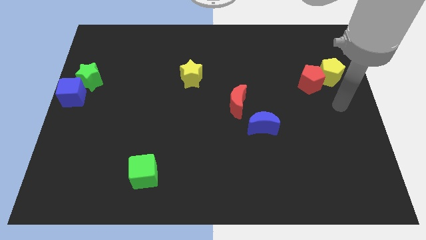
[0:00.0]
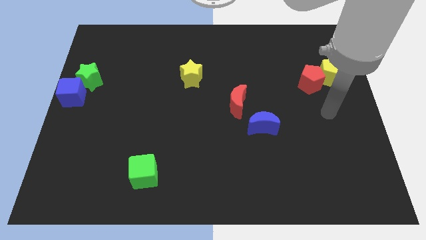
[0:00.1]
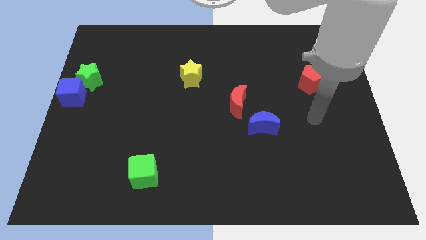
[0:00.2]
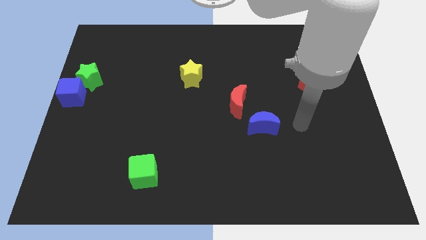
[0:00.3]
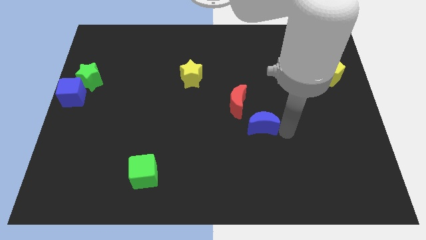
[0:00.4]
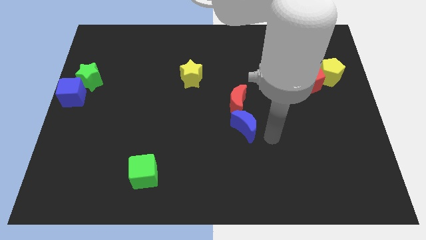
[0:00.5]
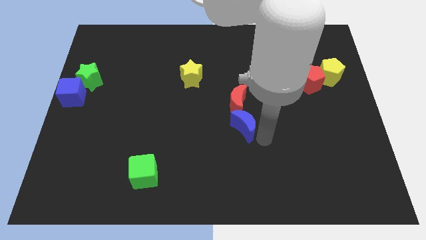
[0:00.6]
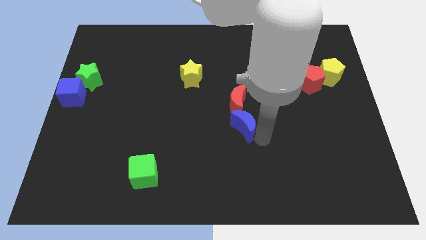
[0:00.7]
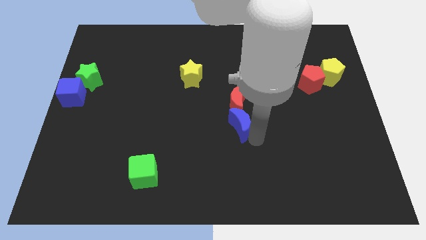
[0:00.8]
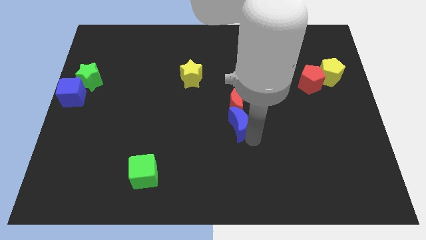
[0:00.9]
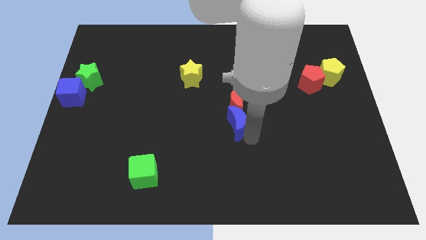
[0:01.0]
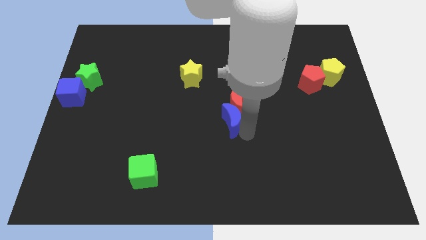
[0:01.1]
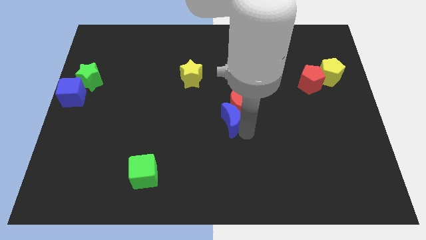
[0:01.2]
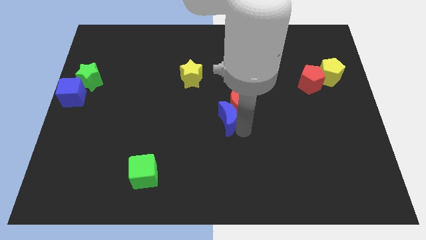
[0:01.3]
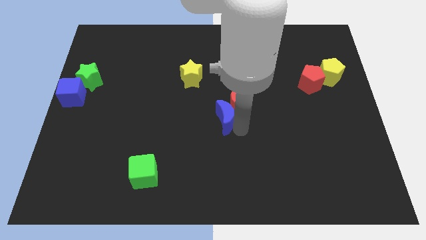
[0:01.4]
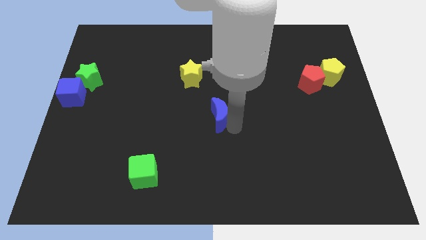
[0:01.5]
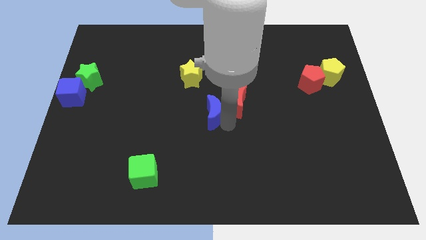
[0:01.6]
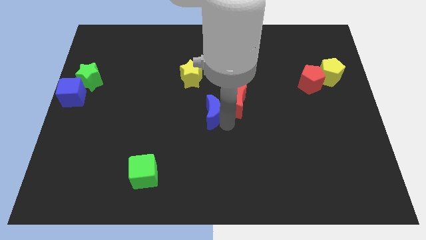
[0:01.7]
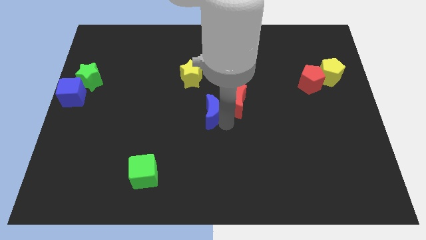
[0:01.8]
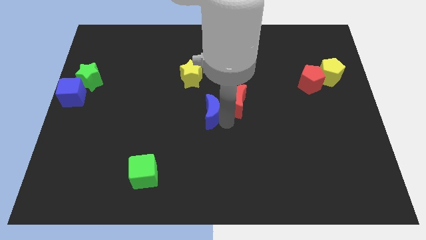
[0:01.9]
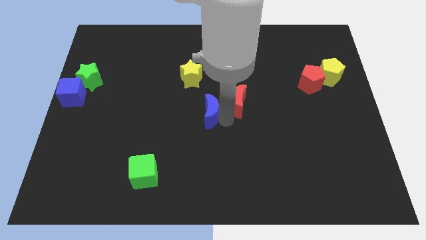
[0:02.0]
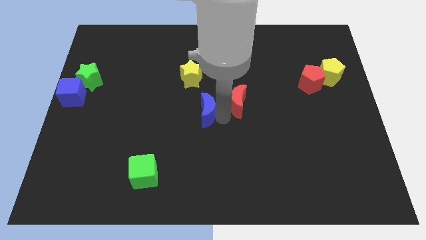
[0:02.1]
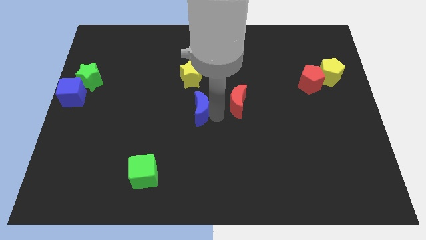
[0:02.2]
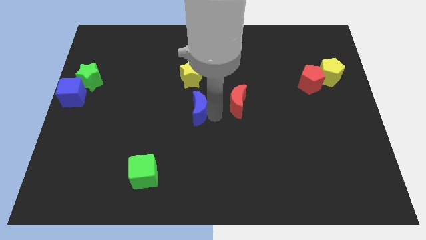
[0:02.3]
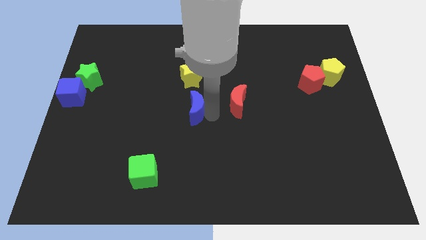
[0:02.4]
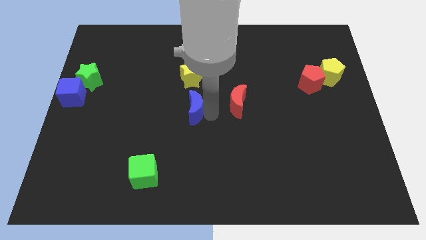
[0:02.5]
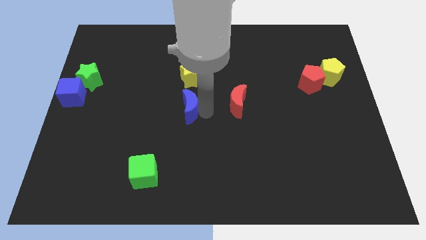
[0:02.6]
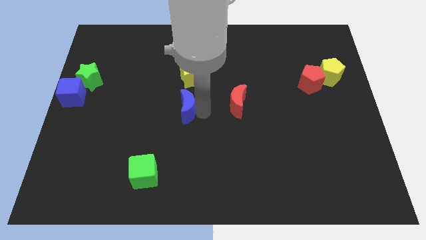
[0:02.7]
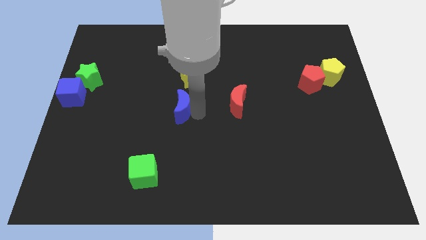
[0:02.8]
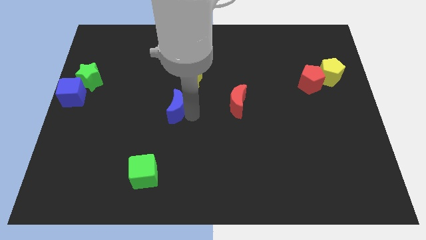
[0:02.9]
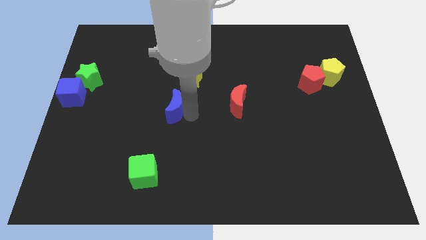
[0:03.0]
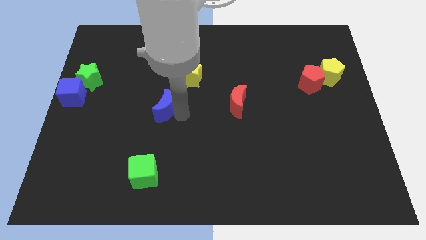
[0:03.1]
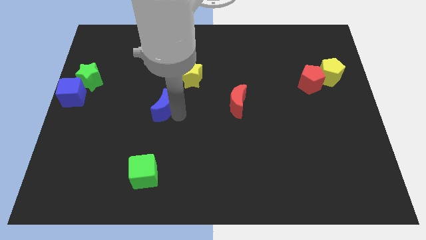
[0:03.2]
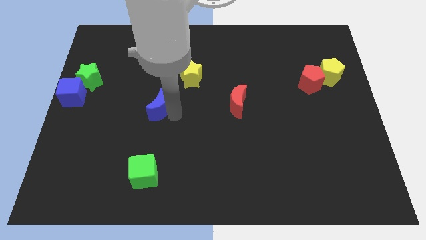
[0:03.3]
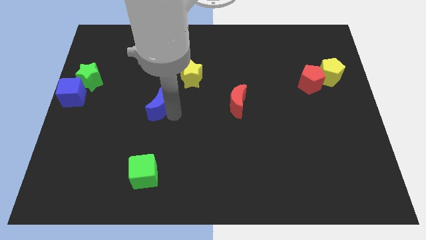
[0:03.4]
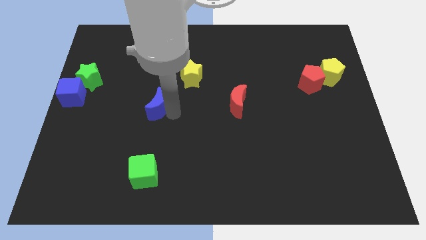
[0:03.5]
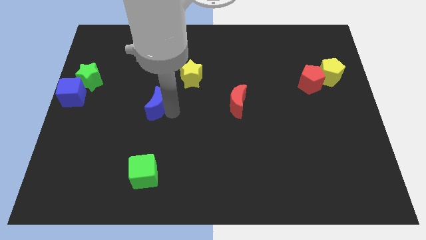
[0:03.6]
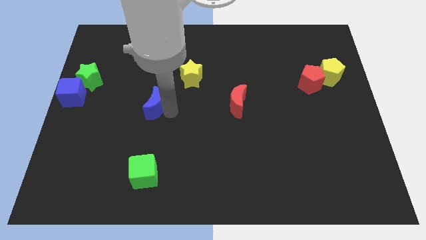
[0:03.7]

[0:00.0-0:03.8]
place blue moon to the center left

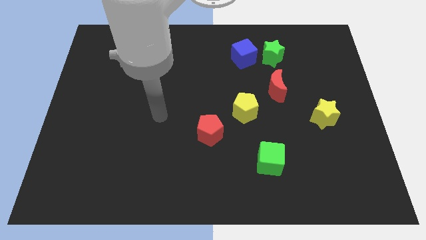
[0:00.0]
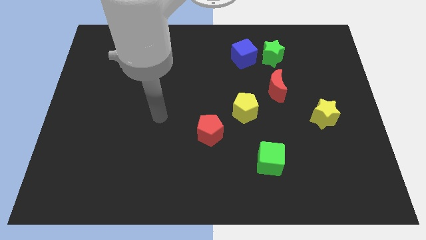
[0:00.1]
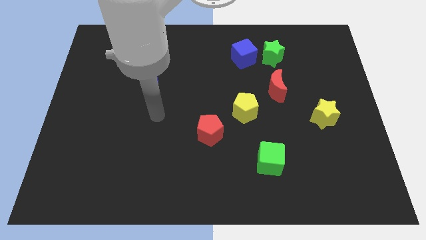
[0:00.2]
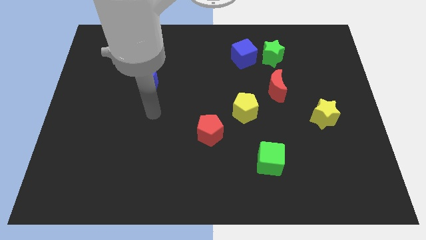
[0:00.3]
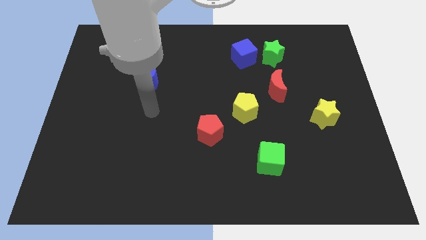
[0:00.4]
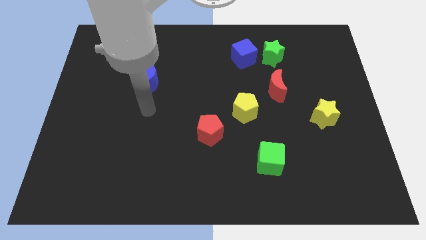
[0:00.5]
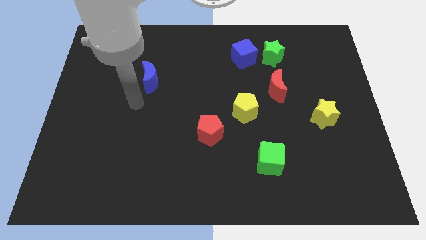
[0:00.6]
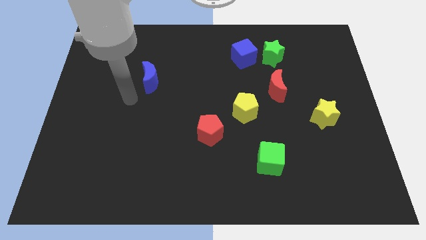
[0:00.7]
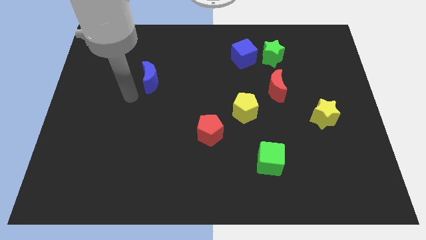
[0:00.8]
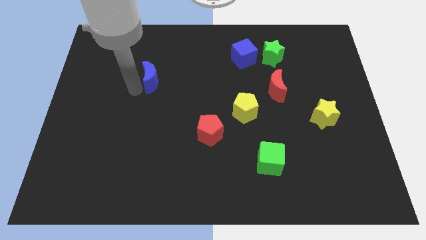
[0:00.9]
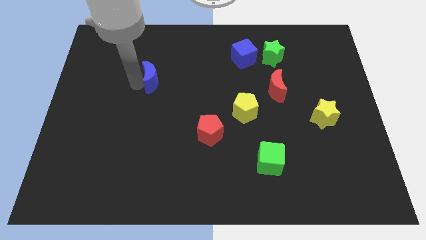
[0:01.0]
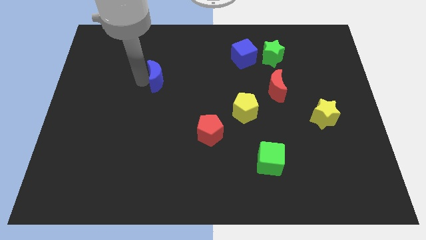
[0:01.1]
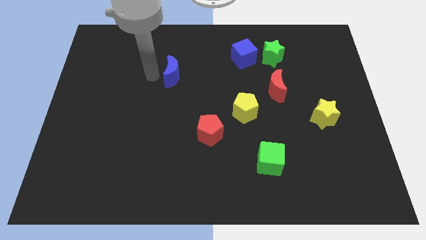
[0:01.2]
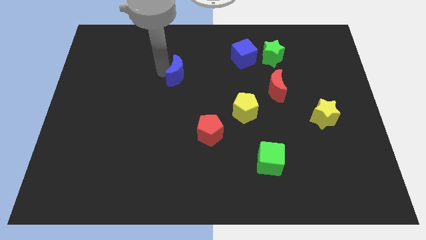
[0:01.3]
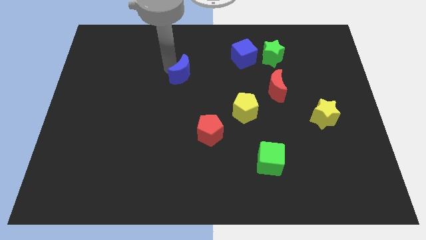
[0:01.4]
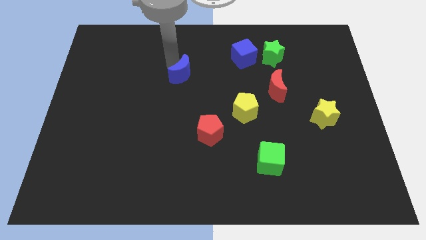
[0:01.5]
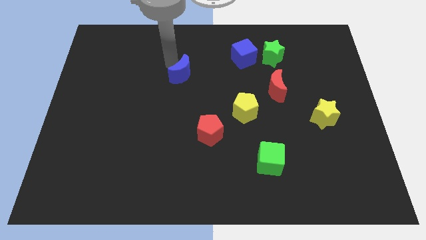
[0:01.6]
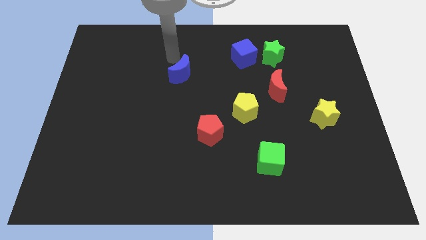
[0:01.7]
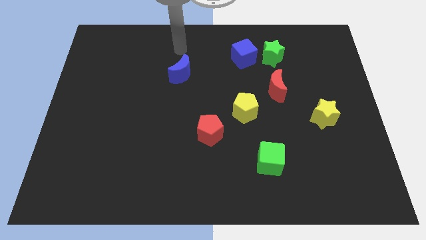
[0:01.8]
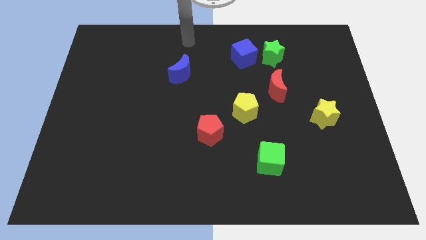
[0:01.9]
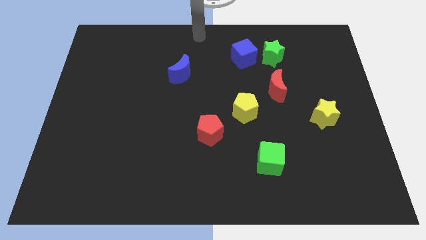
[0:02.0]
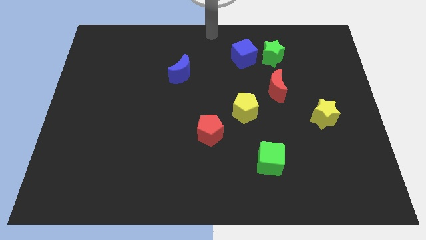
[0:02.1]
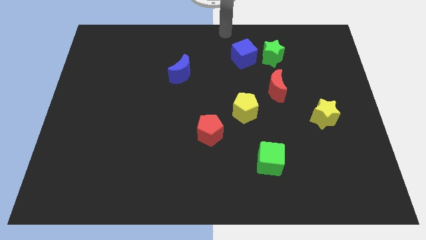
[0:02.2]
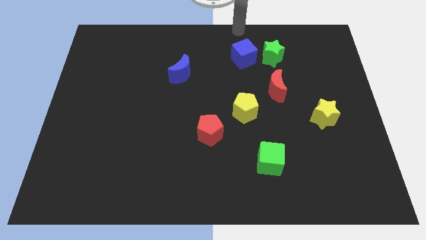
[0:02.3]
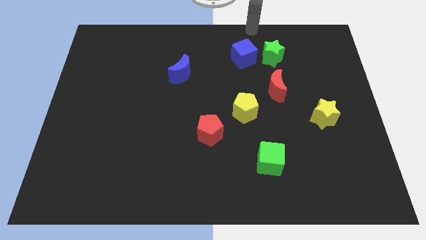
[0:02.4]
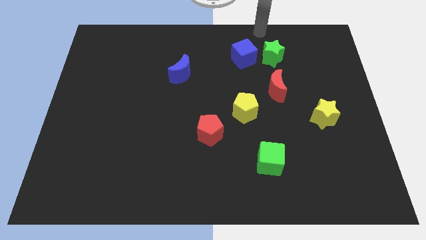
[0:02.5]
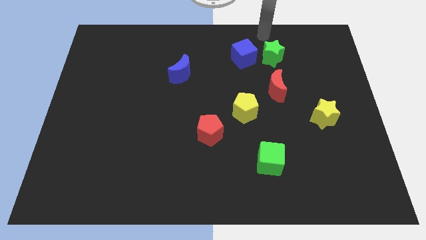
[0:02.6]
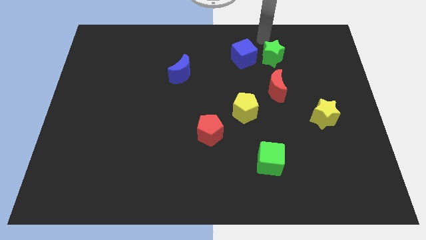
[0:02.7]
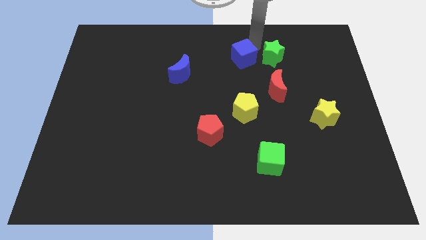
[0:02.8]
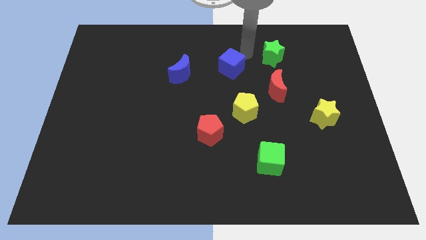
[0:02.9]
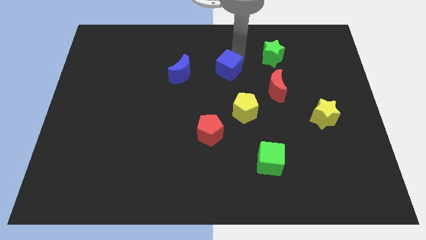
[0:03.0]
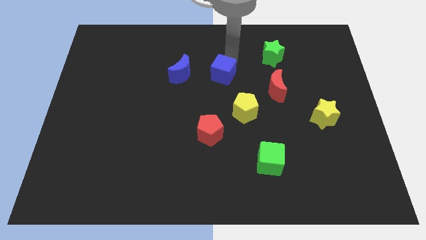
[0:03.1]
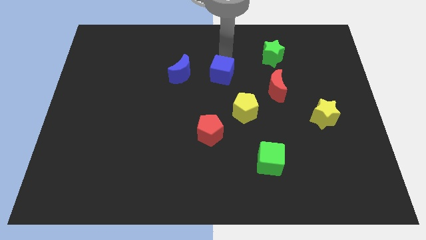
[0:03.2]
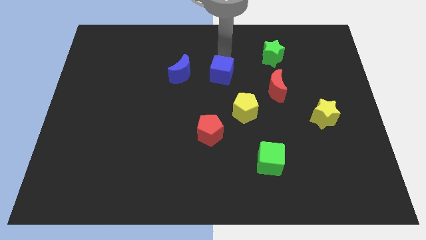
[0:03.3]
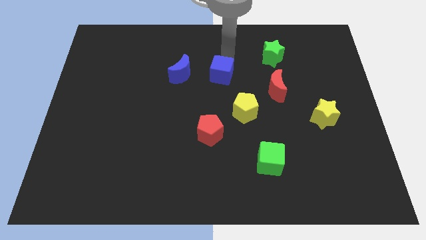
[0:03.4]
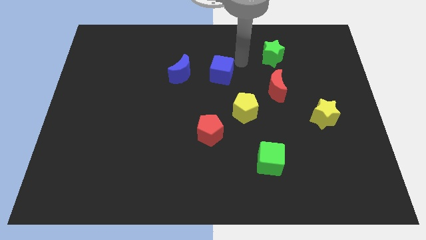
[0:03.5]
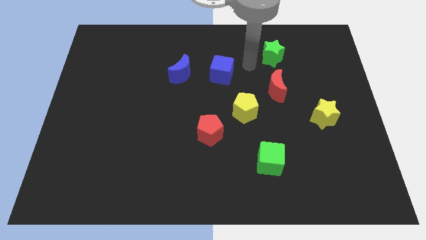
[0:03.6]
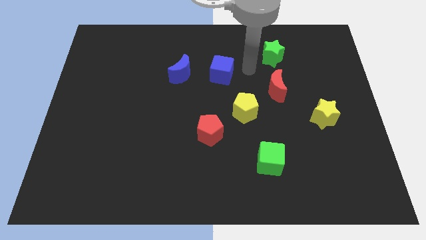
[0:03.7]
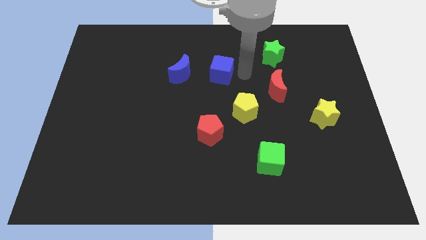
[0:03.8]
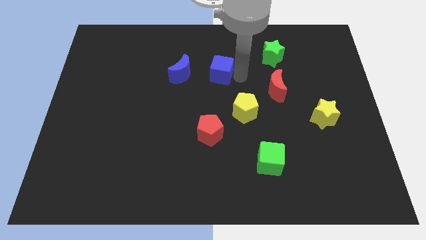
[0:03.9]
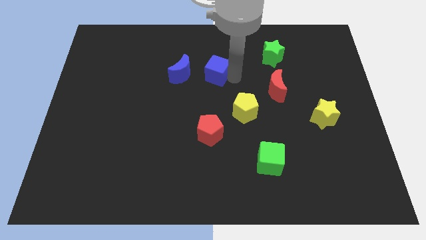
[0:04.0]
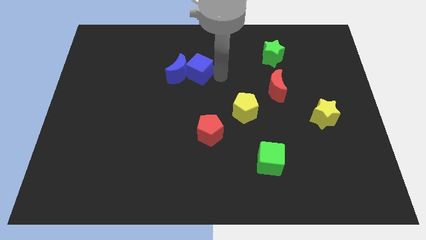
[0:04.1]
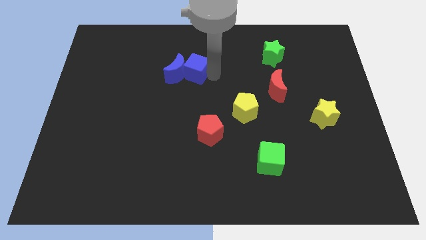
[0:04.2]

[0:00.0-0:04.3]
put the blue cube into the blue moon

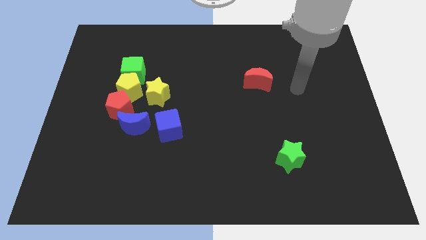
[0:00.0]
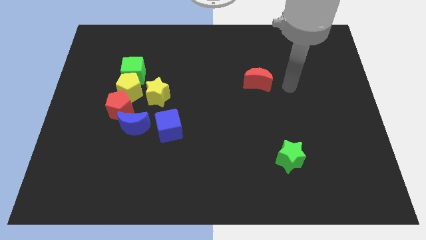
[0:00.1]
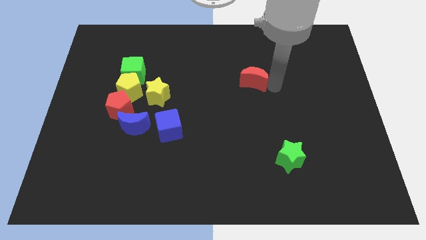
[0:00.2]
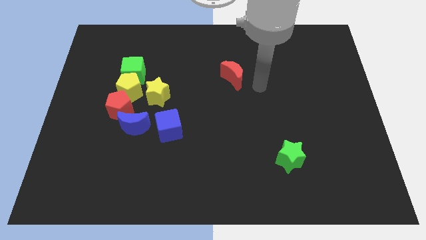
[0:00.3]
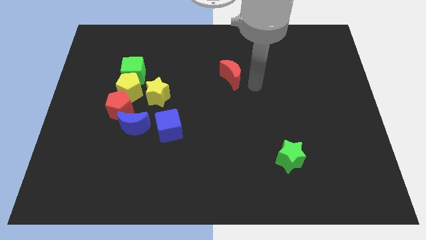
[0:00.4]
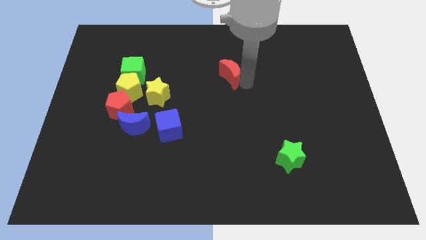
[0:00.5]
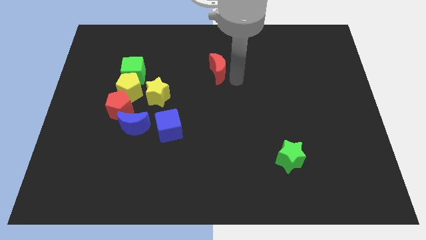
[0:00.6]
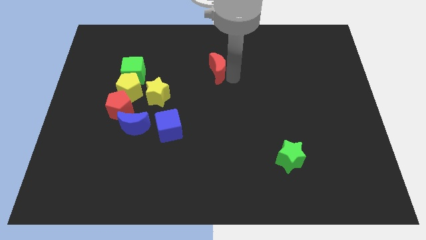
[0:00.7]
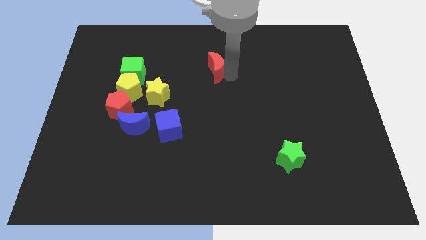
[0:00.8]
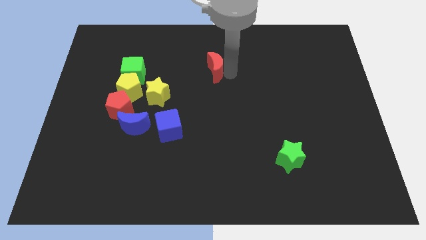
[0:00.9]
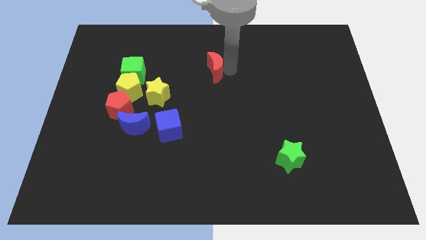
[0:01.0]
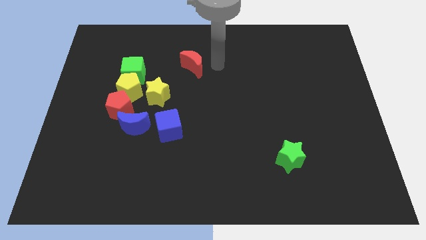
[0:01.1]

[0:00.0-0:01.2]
move the red crescent to the left of the board
